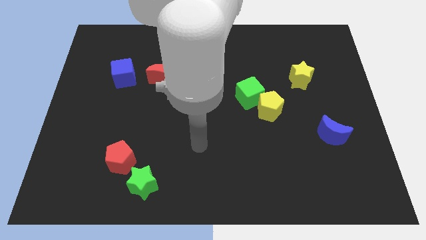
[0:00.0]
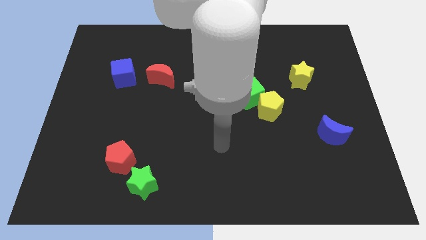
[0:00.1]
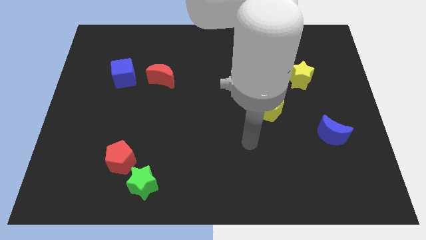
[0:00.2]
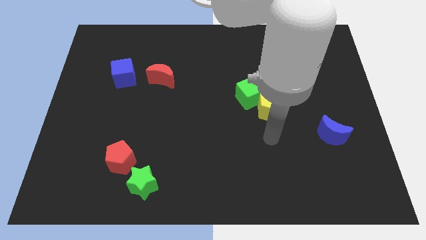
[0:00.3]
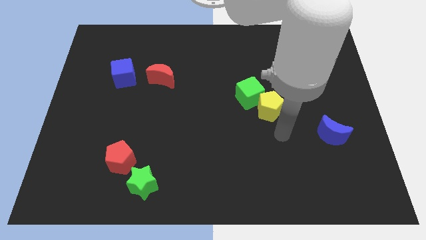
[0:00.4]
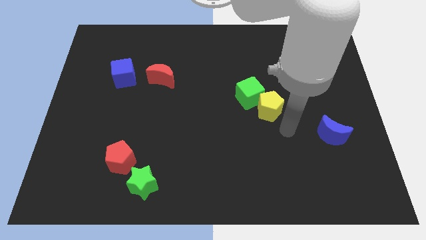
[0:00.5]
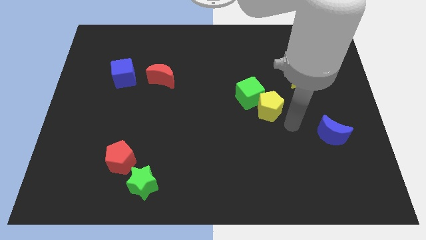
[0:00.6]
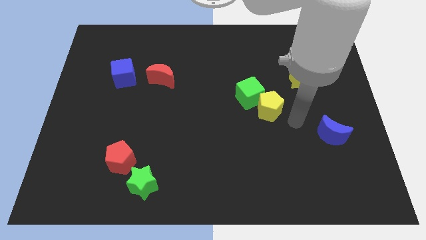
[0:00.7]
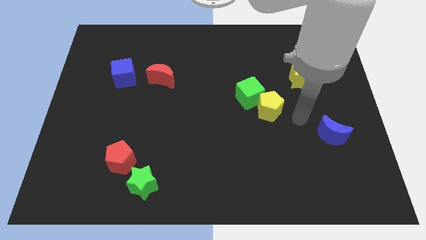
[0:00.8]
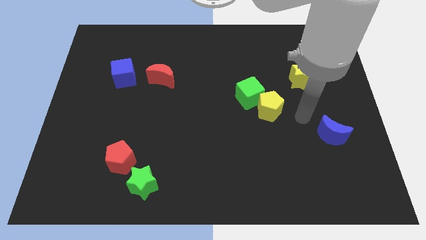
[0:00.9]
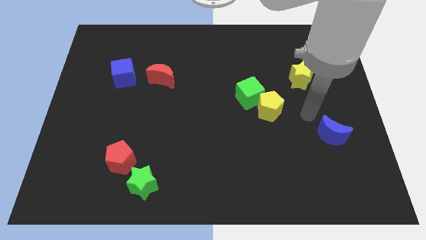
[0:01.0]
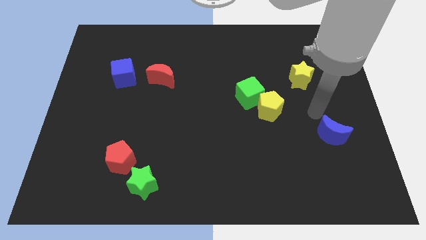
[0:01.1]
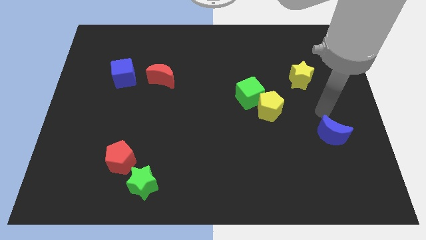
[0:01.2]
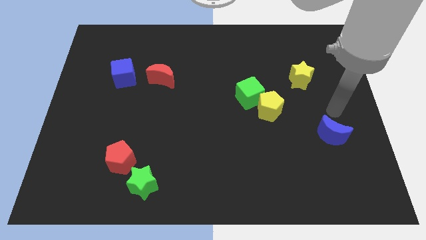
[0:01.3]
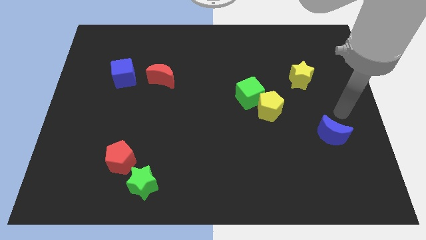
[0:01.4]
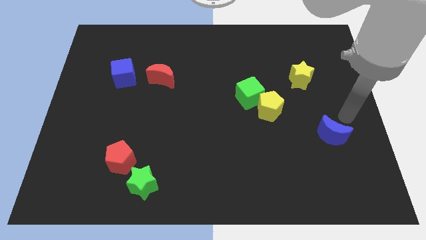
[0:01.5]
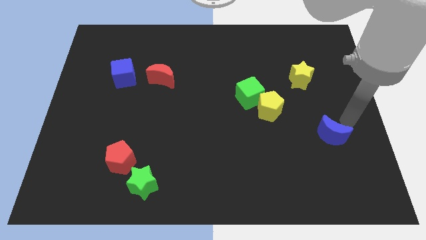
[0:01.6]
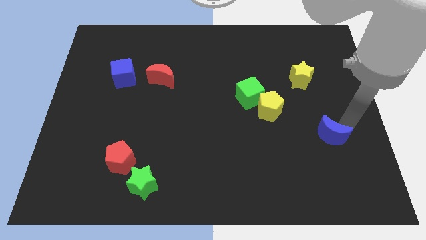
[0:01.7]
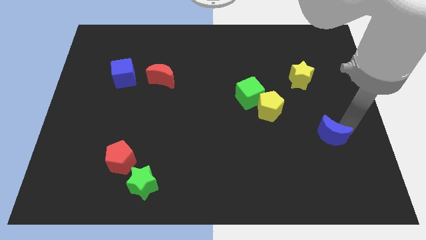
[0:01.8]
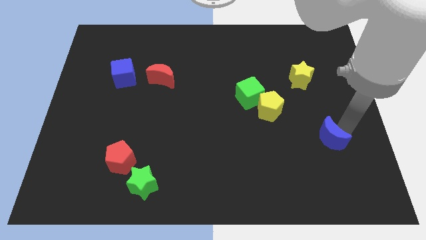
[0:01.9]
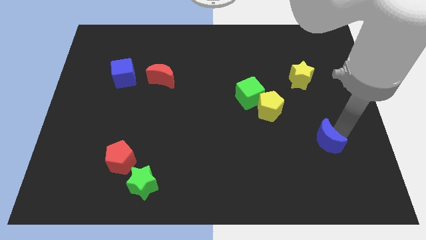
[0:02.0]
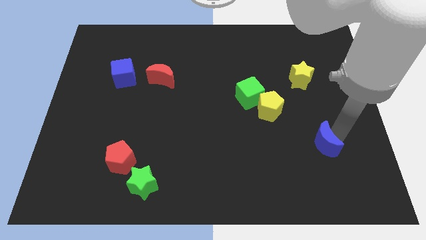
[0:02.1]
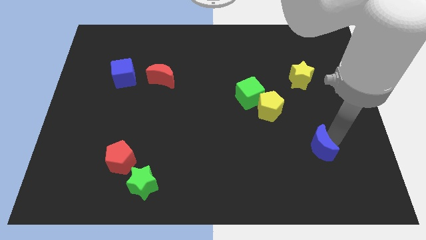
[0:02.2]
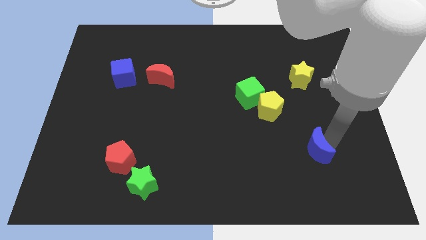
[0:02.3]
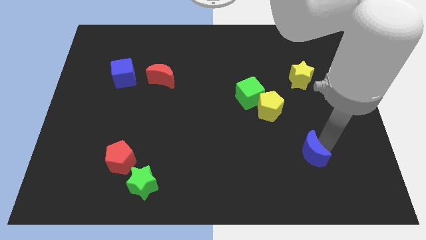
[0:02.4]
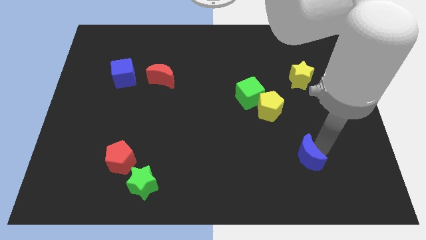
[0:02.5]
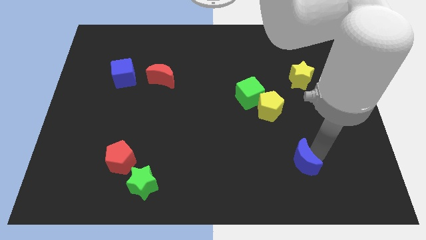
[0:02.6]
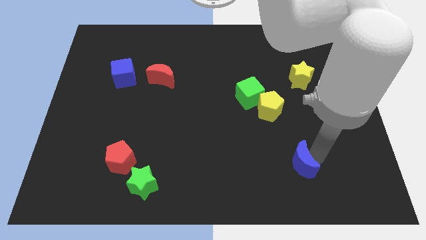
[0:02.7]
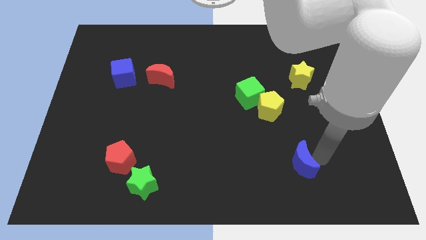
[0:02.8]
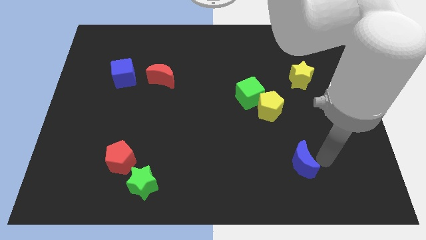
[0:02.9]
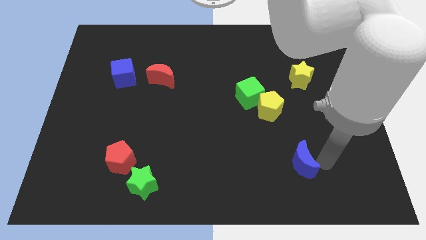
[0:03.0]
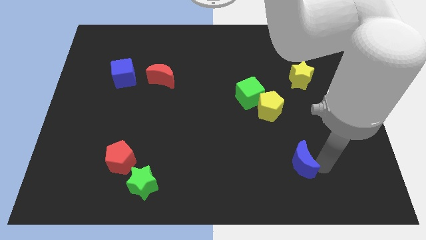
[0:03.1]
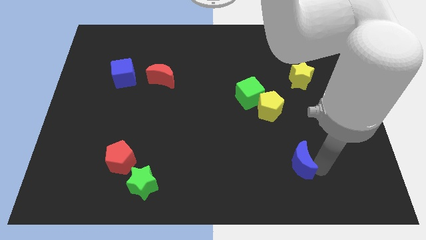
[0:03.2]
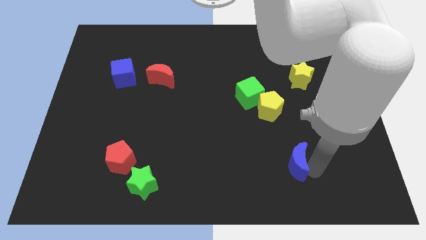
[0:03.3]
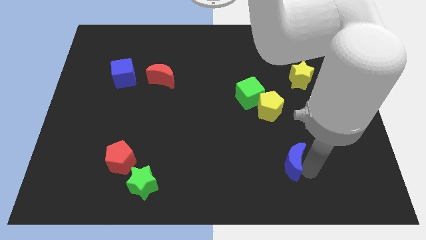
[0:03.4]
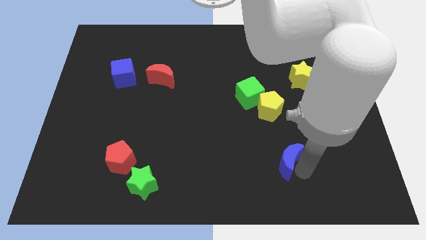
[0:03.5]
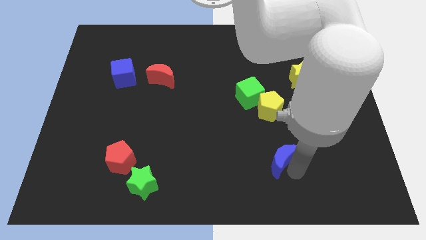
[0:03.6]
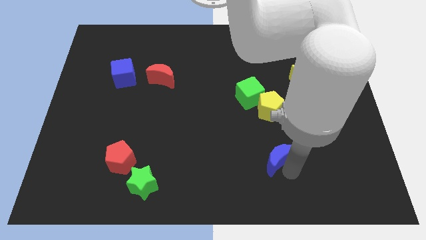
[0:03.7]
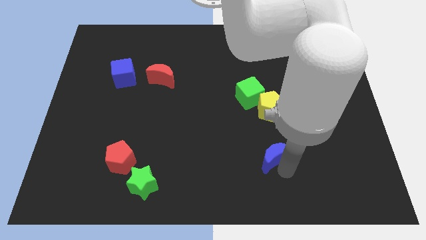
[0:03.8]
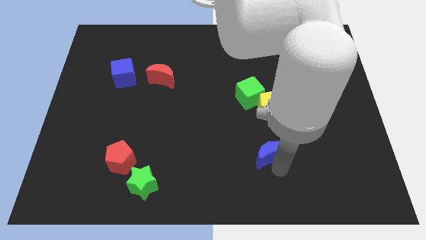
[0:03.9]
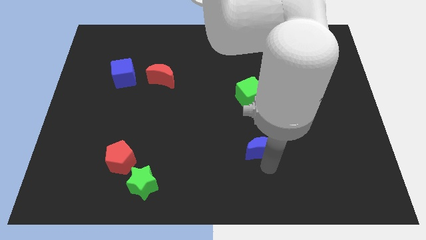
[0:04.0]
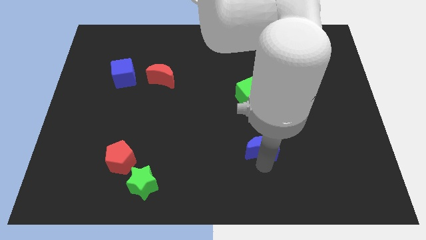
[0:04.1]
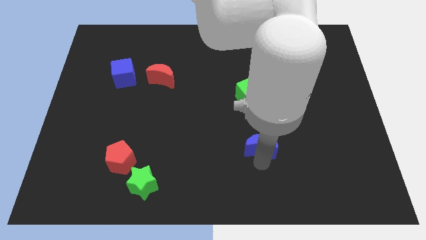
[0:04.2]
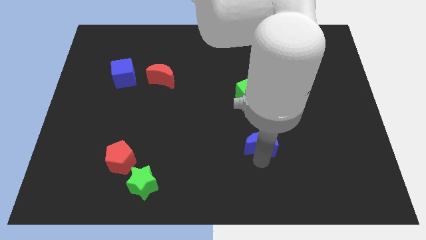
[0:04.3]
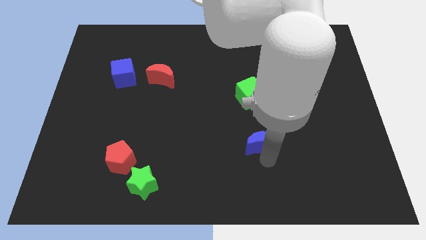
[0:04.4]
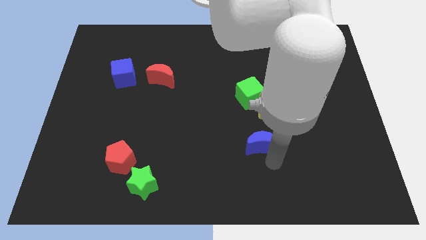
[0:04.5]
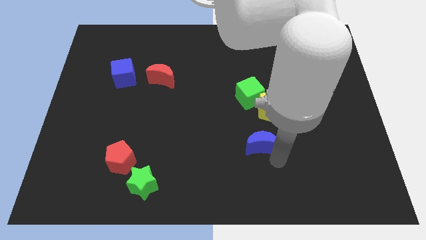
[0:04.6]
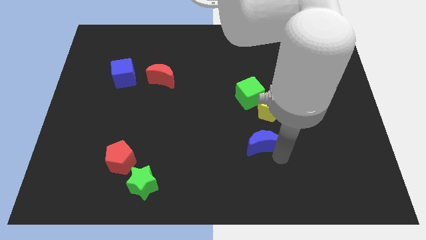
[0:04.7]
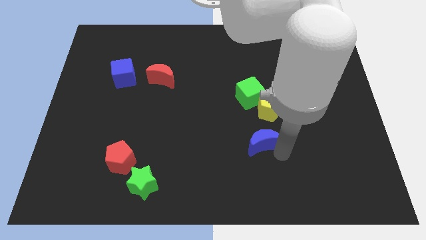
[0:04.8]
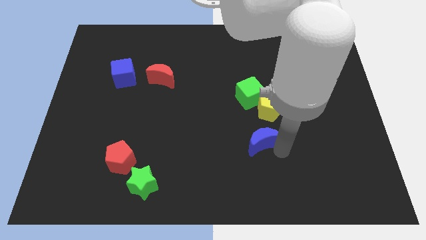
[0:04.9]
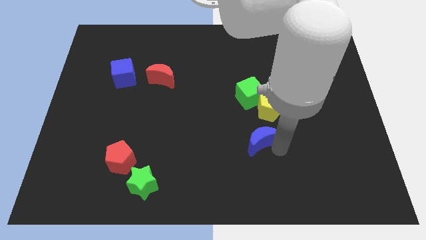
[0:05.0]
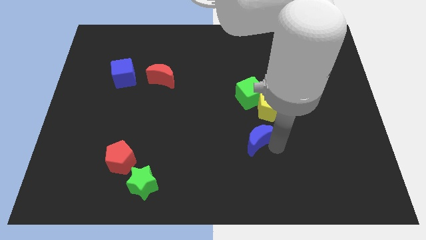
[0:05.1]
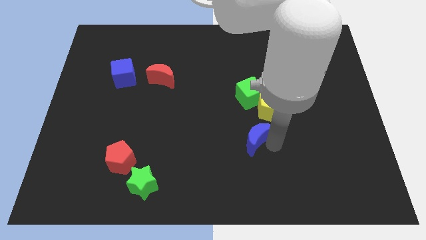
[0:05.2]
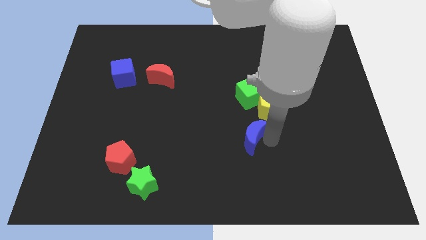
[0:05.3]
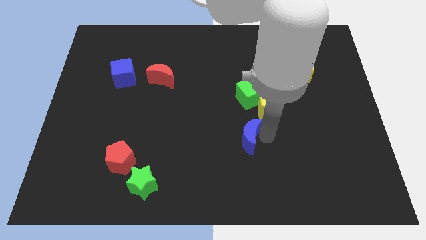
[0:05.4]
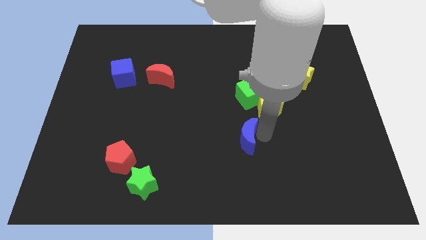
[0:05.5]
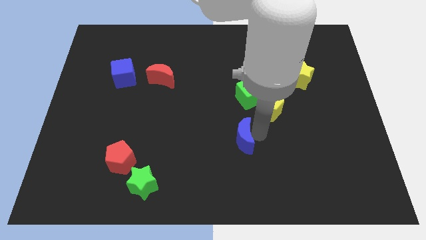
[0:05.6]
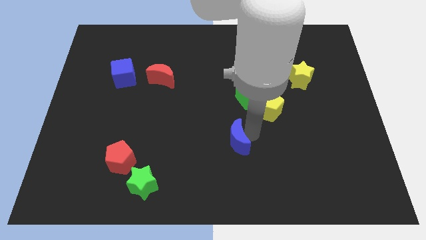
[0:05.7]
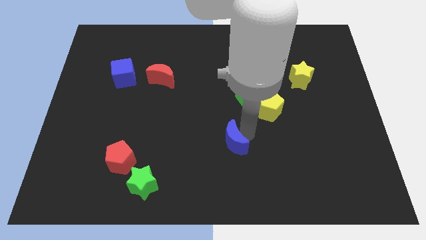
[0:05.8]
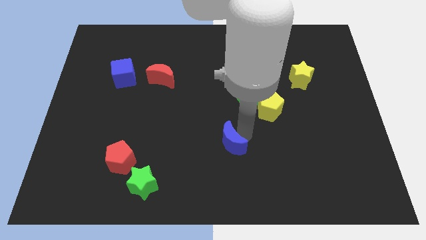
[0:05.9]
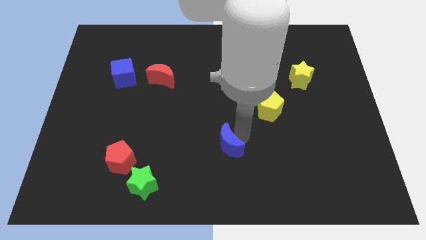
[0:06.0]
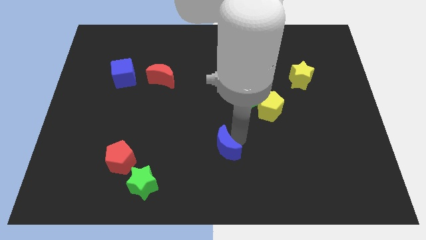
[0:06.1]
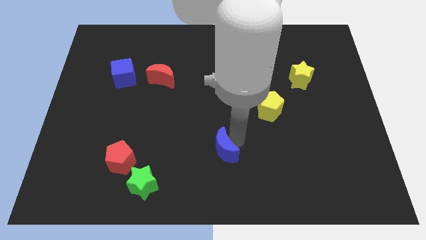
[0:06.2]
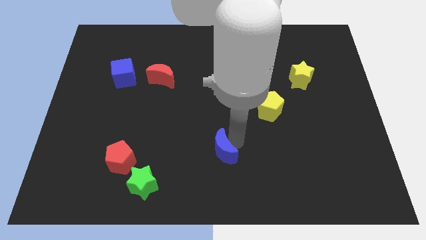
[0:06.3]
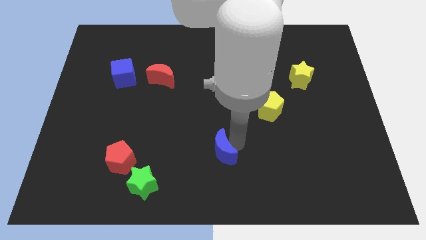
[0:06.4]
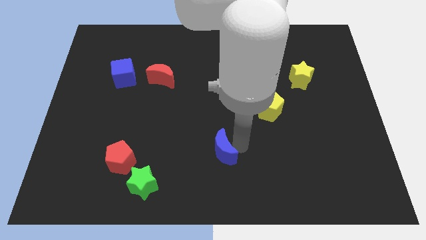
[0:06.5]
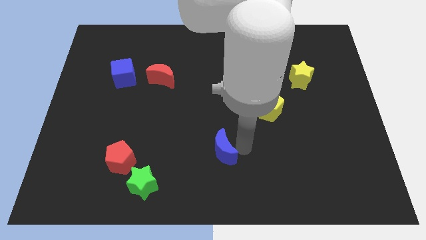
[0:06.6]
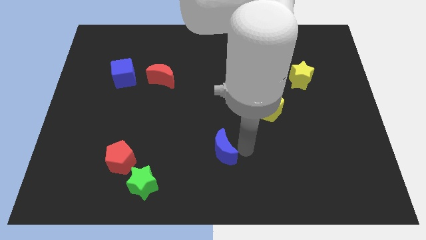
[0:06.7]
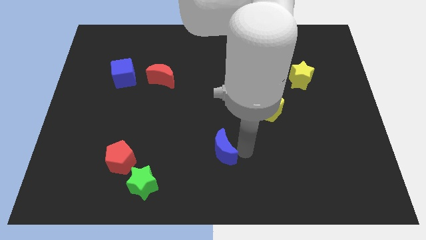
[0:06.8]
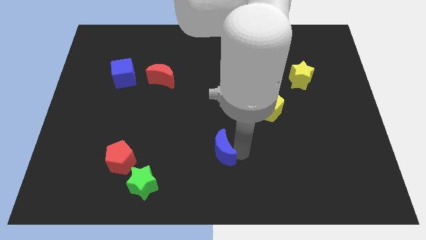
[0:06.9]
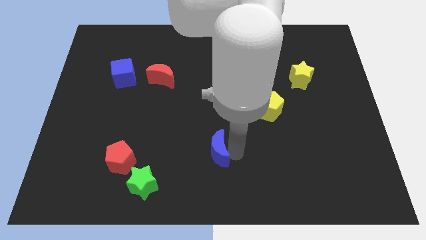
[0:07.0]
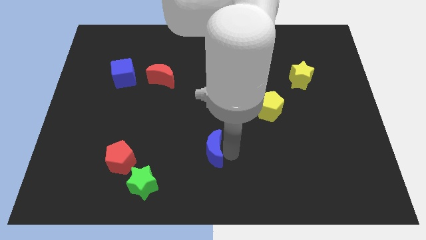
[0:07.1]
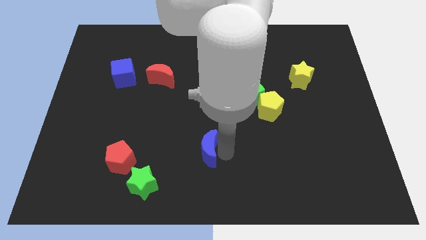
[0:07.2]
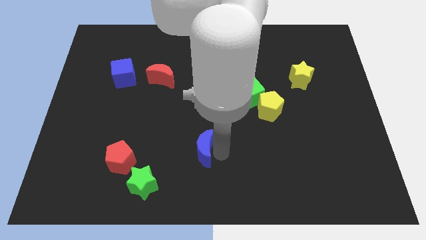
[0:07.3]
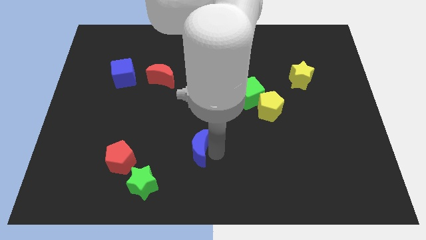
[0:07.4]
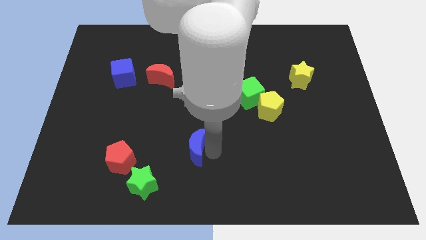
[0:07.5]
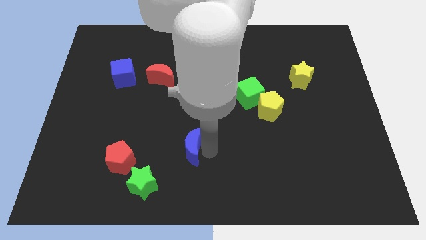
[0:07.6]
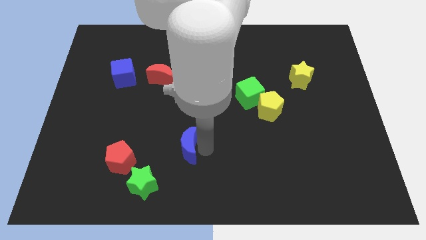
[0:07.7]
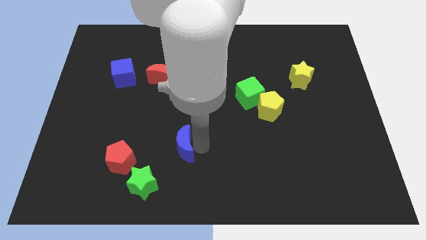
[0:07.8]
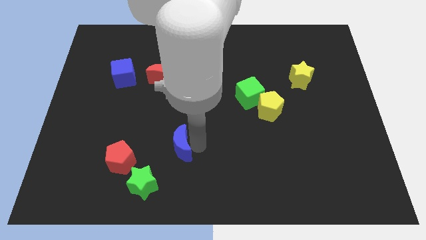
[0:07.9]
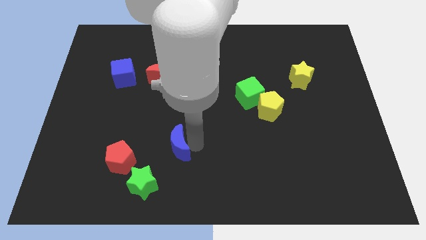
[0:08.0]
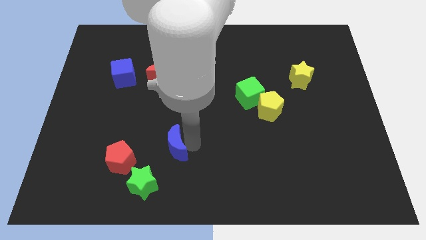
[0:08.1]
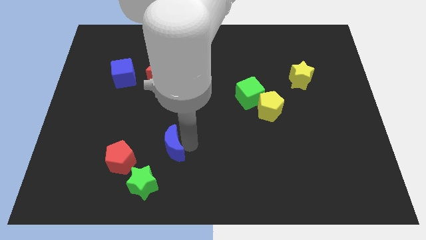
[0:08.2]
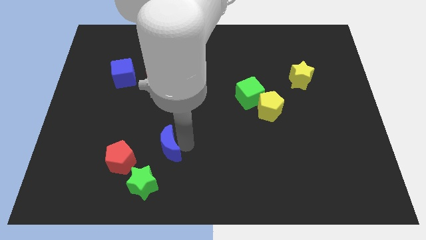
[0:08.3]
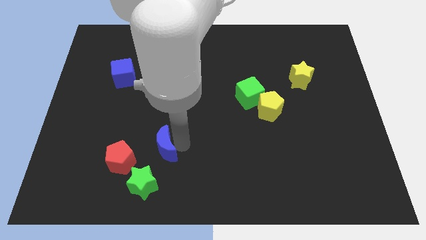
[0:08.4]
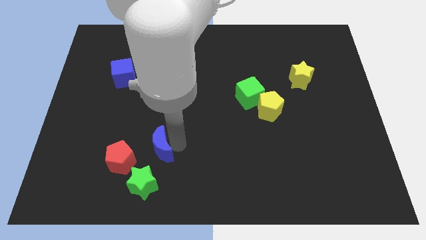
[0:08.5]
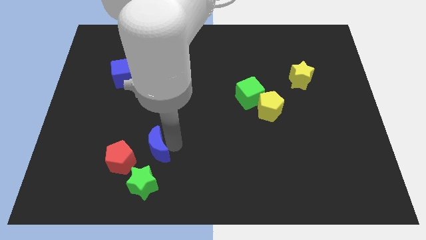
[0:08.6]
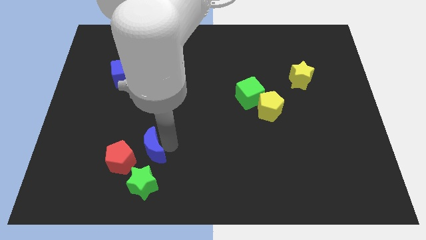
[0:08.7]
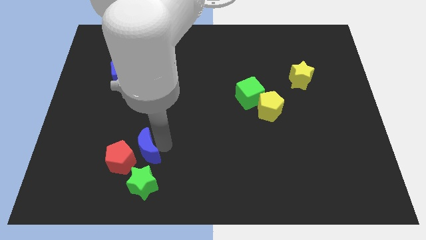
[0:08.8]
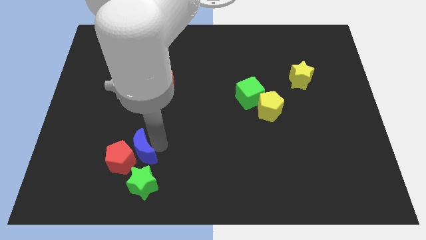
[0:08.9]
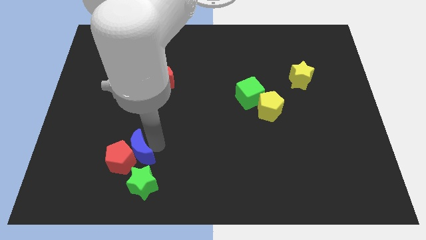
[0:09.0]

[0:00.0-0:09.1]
put the blue moon to the red pentagon
